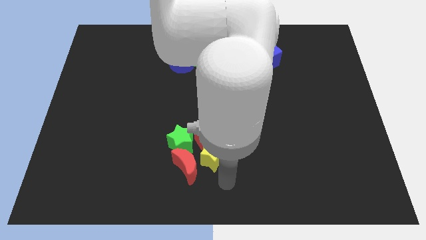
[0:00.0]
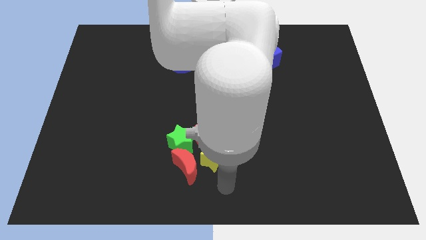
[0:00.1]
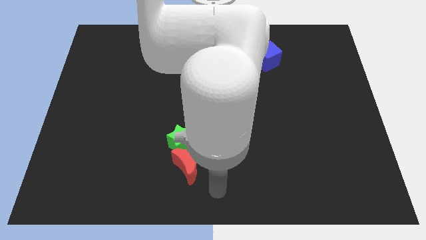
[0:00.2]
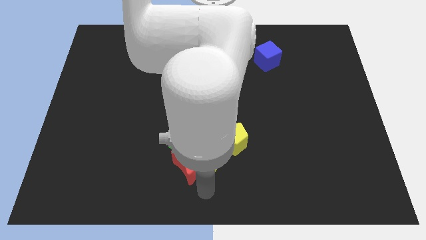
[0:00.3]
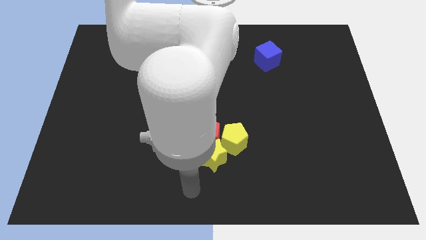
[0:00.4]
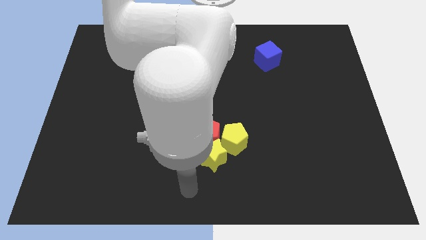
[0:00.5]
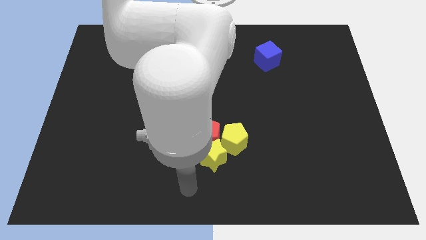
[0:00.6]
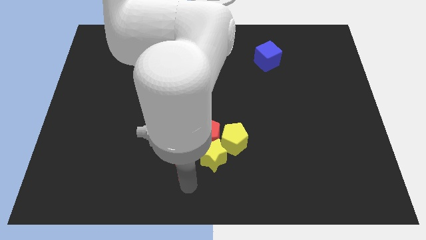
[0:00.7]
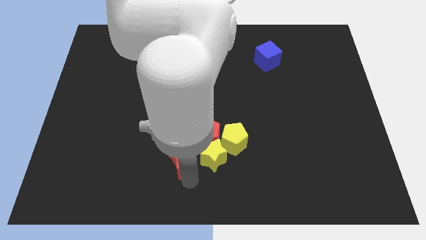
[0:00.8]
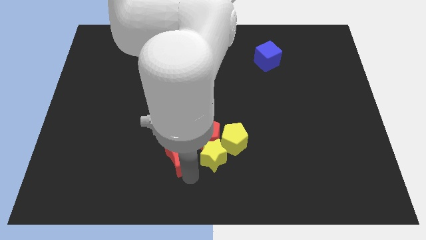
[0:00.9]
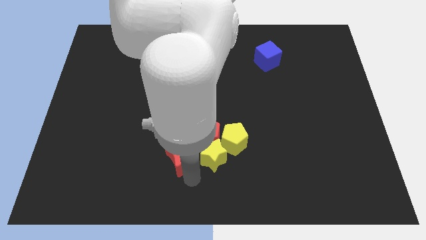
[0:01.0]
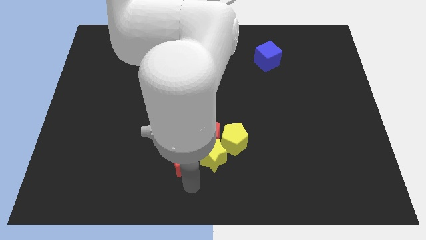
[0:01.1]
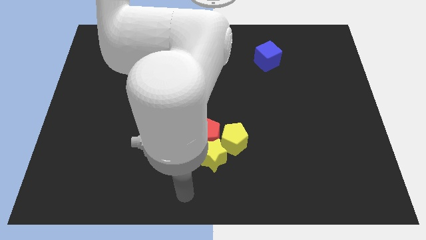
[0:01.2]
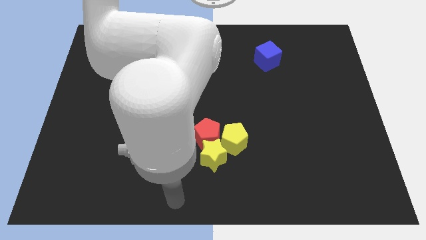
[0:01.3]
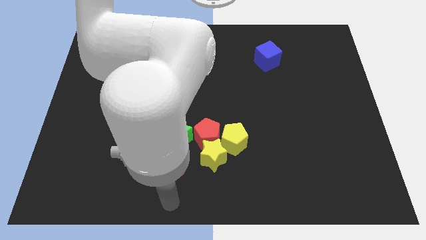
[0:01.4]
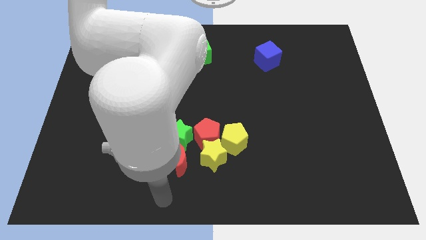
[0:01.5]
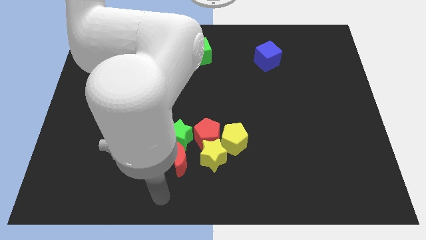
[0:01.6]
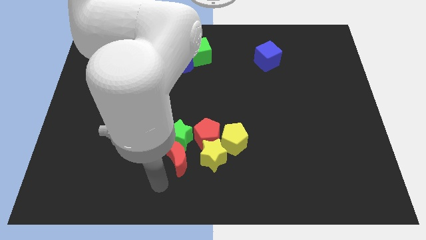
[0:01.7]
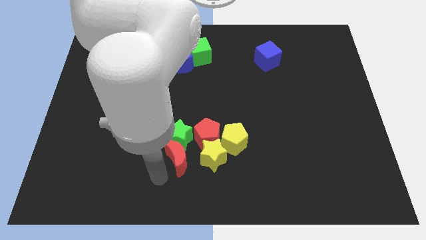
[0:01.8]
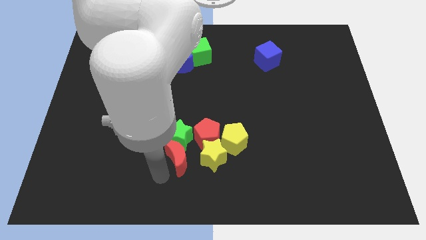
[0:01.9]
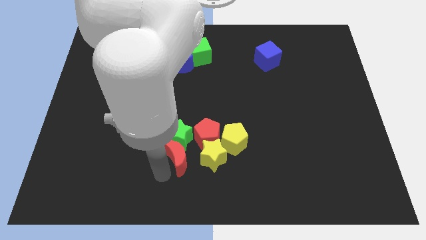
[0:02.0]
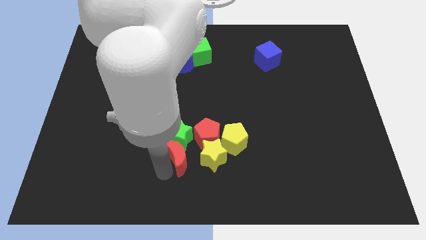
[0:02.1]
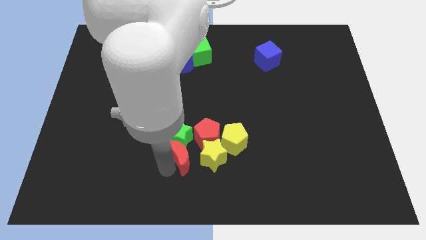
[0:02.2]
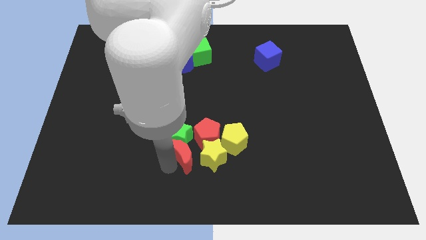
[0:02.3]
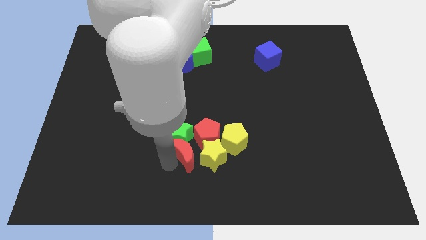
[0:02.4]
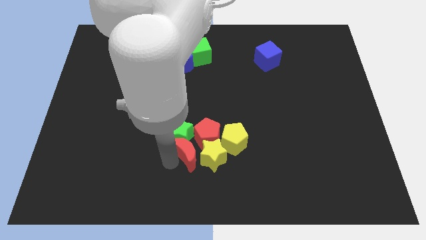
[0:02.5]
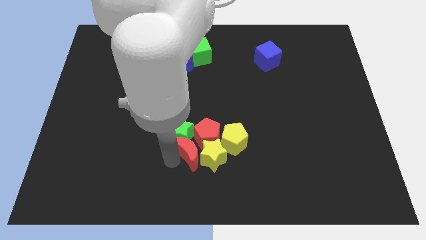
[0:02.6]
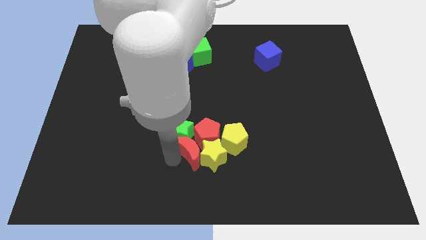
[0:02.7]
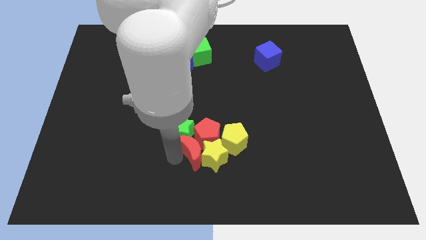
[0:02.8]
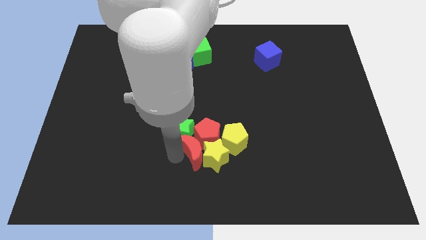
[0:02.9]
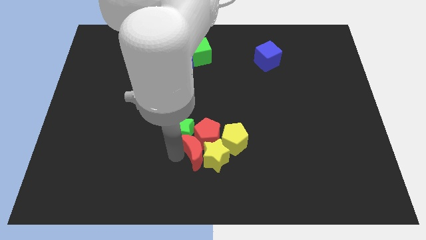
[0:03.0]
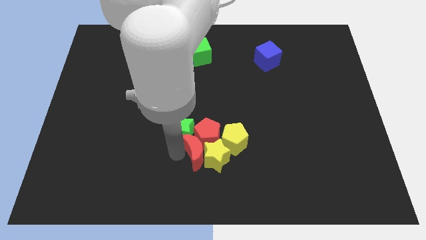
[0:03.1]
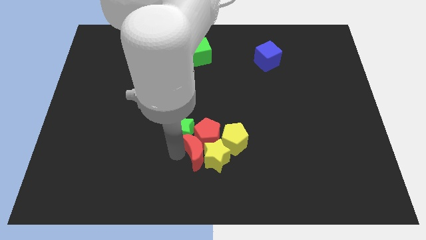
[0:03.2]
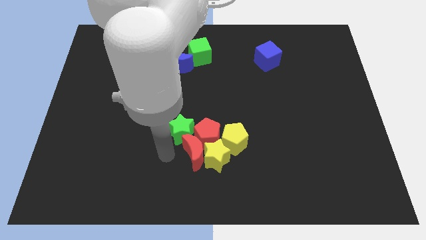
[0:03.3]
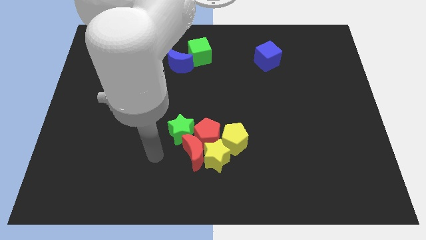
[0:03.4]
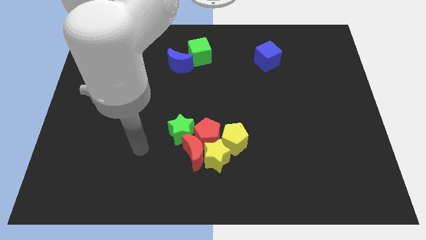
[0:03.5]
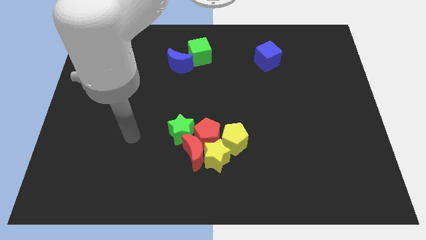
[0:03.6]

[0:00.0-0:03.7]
move the red moon into red pentagon

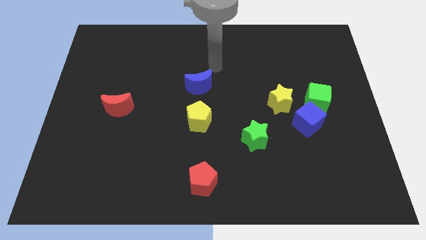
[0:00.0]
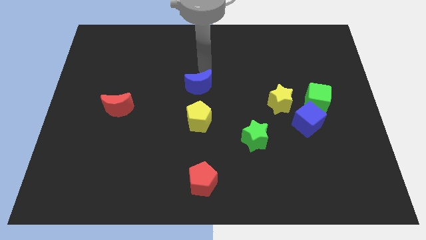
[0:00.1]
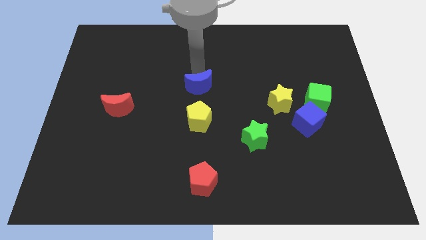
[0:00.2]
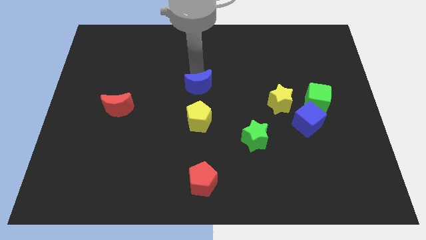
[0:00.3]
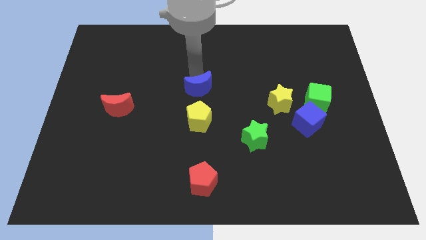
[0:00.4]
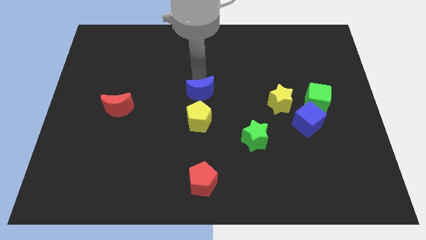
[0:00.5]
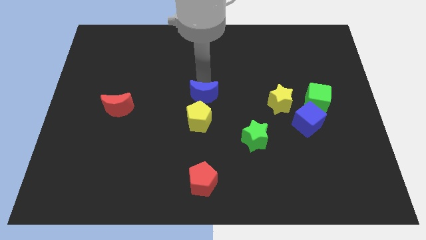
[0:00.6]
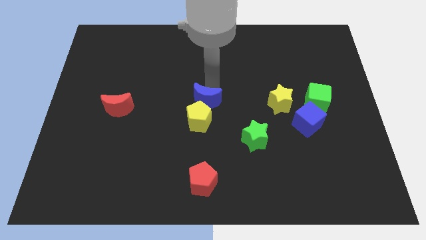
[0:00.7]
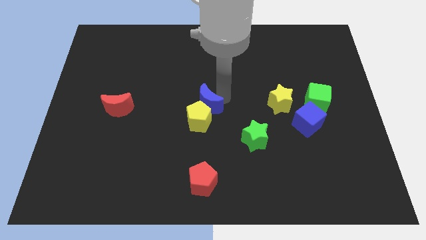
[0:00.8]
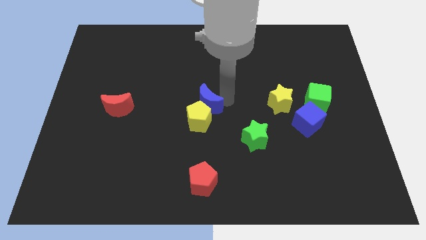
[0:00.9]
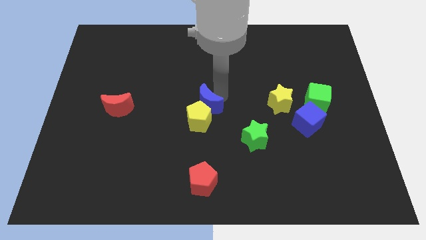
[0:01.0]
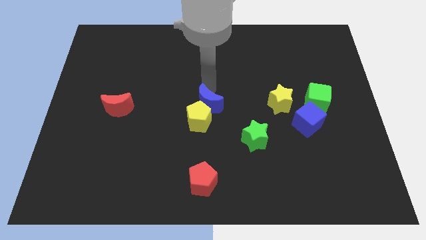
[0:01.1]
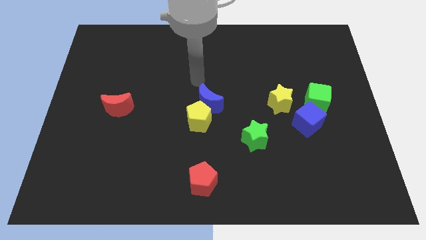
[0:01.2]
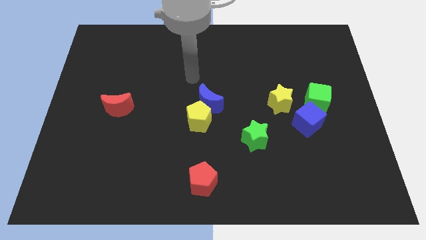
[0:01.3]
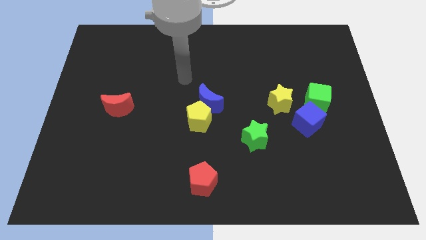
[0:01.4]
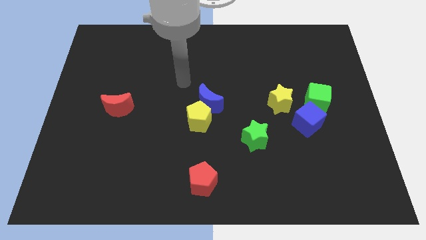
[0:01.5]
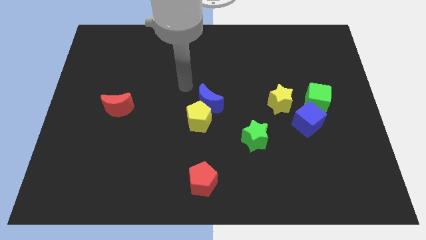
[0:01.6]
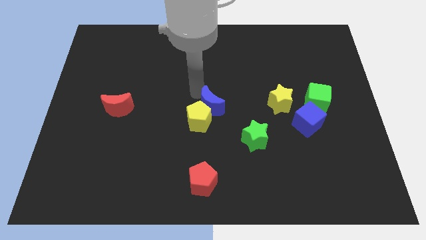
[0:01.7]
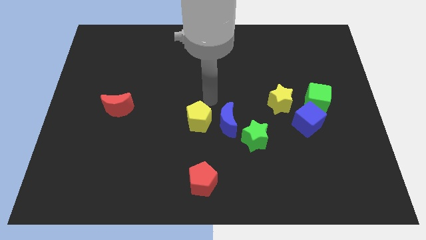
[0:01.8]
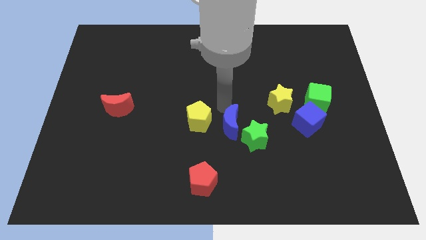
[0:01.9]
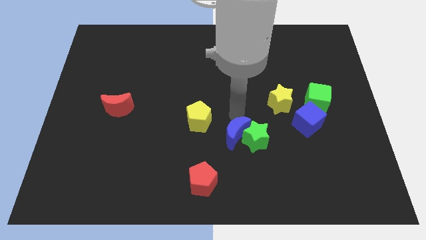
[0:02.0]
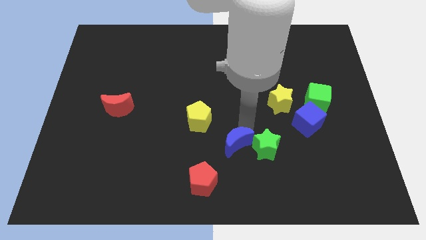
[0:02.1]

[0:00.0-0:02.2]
push the blue crescent into the green star

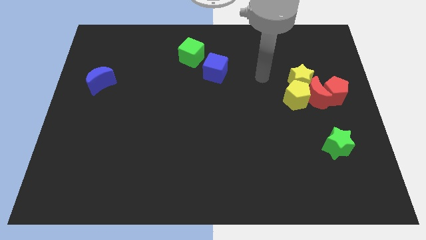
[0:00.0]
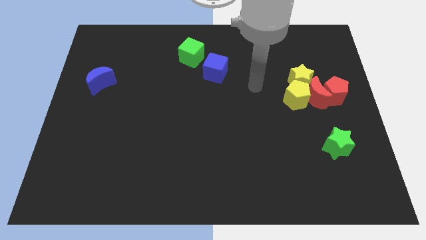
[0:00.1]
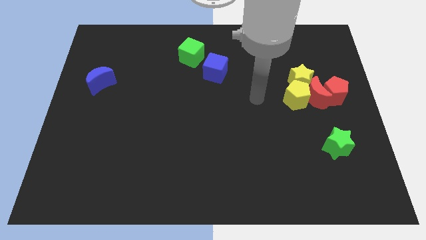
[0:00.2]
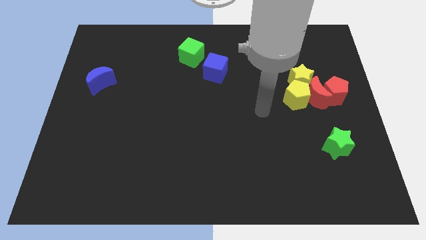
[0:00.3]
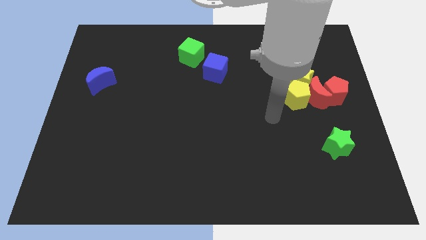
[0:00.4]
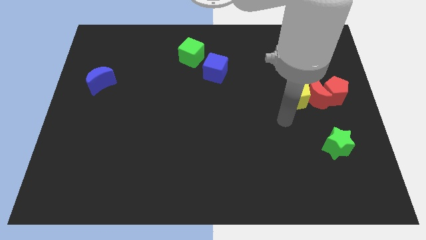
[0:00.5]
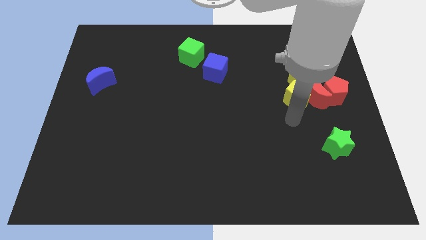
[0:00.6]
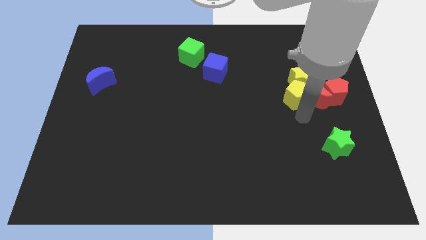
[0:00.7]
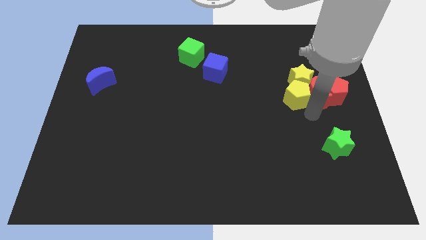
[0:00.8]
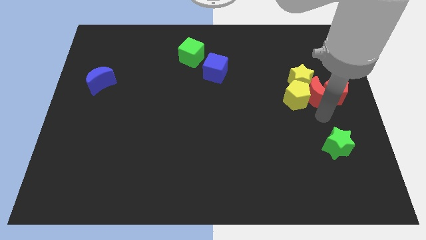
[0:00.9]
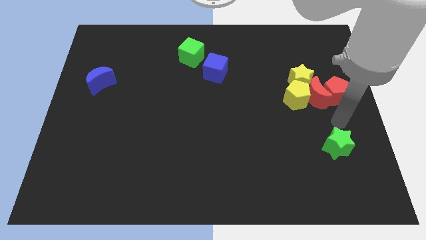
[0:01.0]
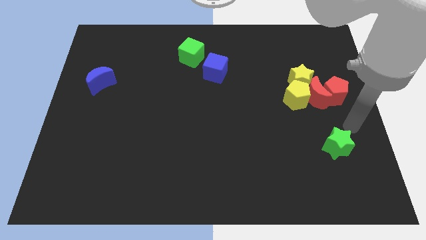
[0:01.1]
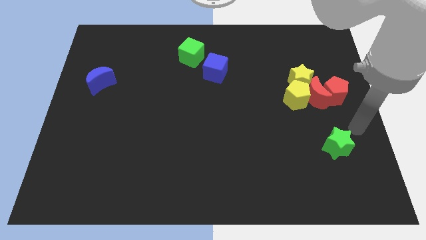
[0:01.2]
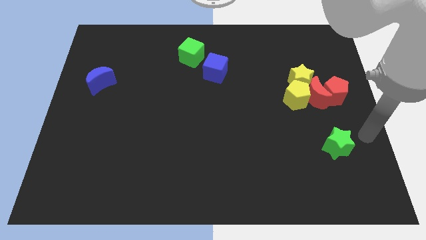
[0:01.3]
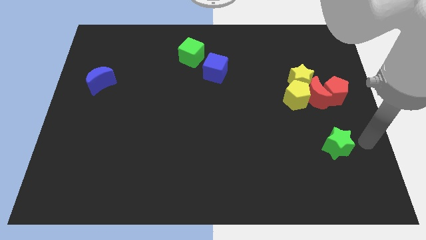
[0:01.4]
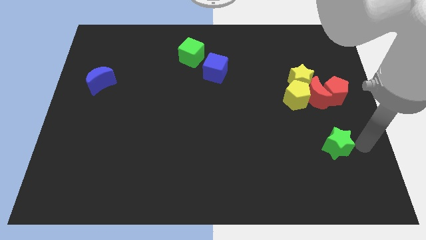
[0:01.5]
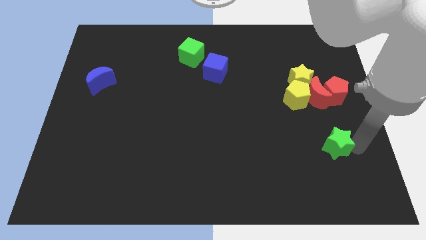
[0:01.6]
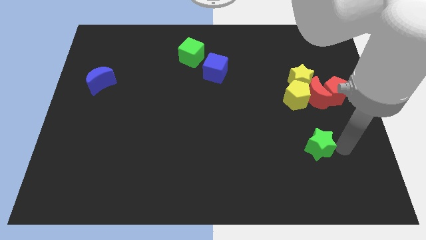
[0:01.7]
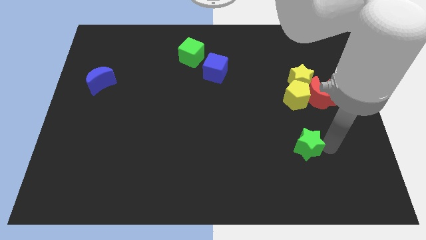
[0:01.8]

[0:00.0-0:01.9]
move the green star slightly left

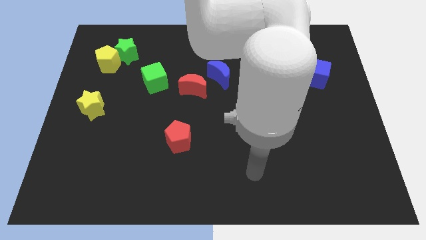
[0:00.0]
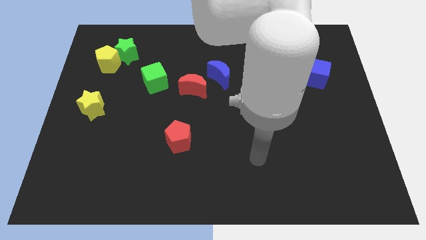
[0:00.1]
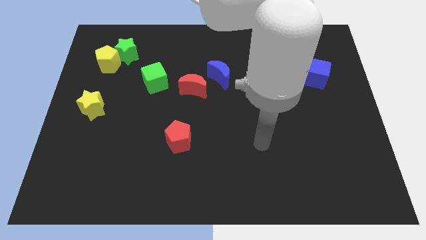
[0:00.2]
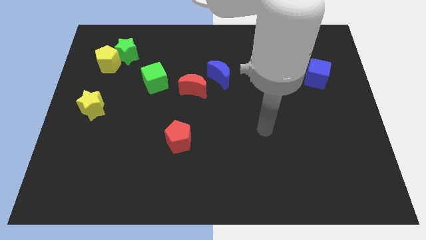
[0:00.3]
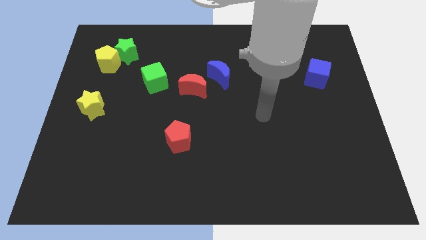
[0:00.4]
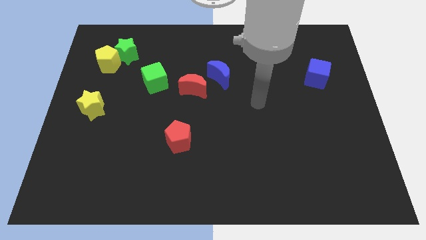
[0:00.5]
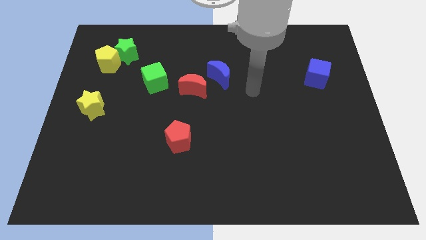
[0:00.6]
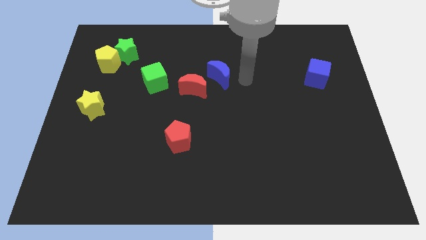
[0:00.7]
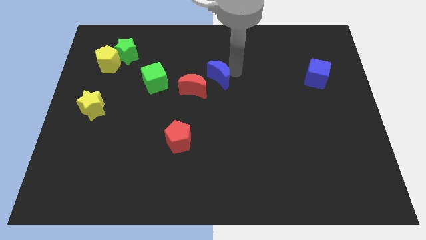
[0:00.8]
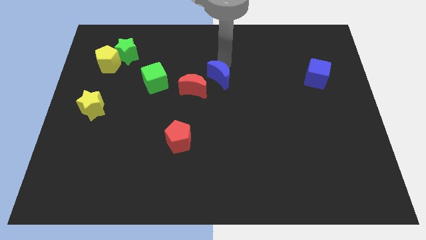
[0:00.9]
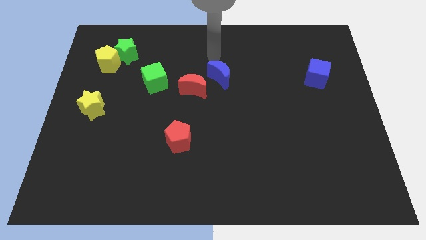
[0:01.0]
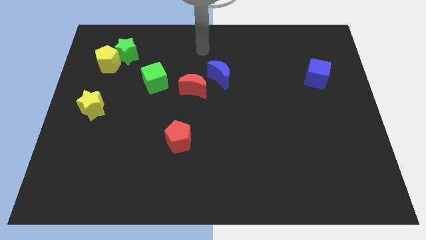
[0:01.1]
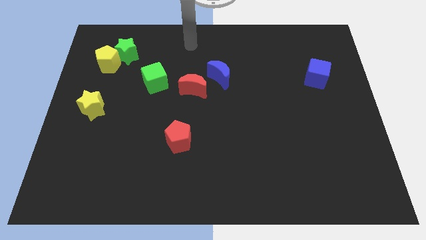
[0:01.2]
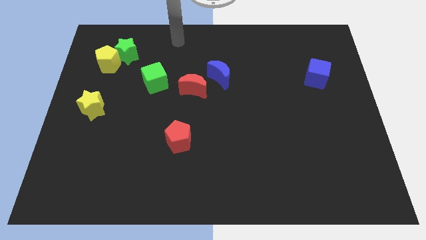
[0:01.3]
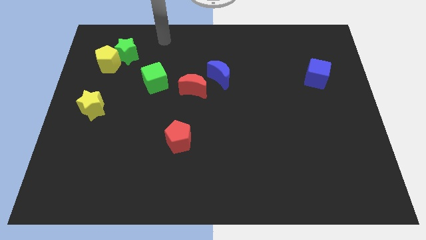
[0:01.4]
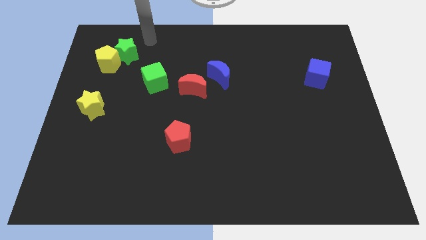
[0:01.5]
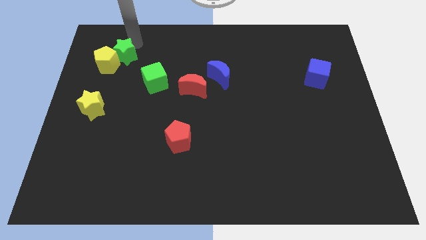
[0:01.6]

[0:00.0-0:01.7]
move your arm close to the green star
